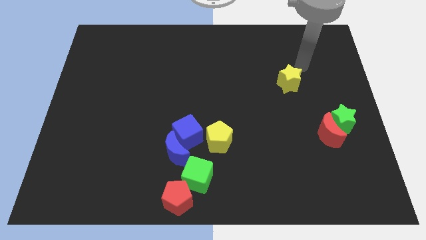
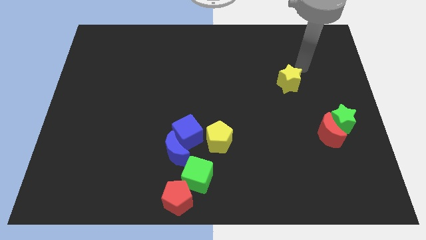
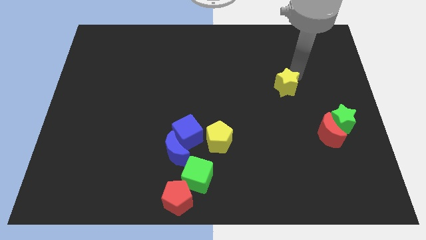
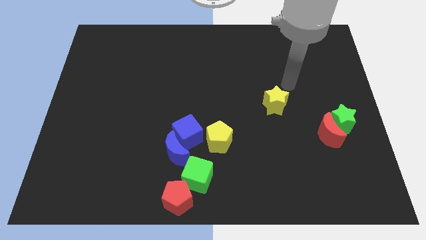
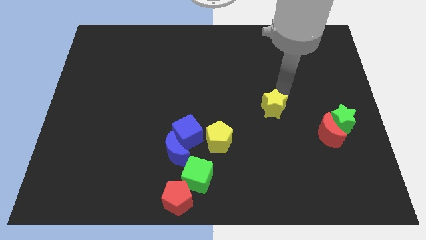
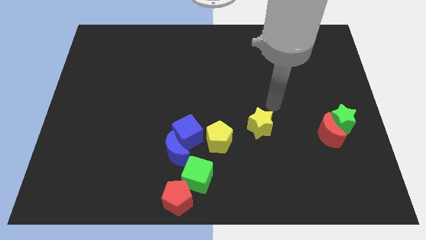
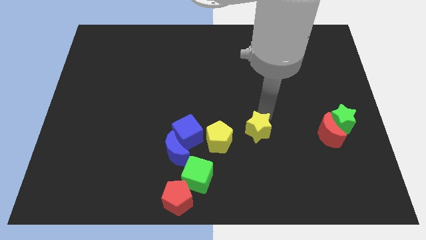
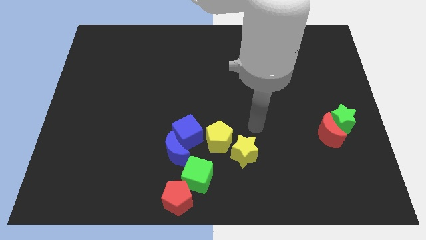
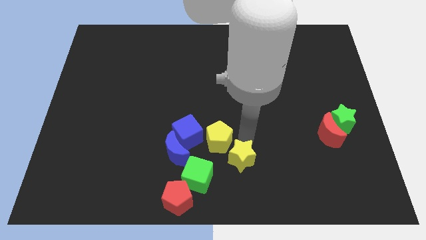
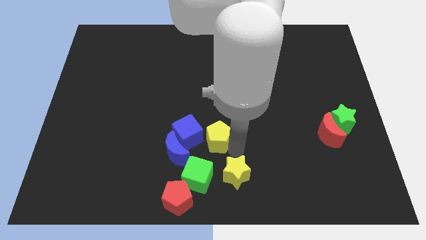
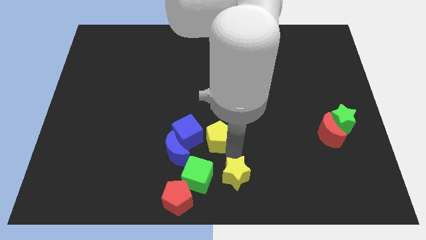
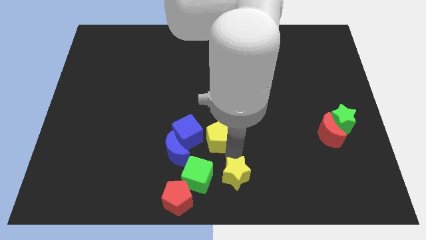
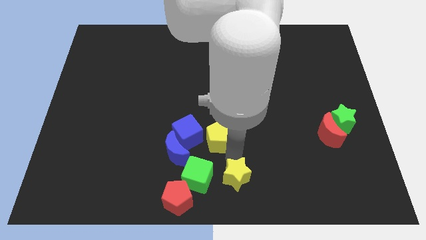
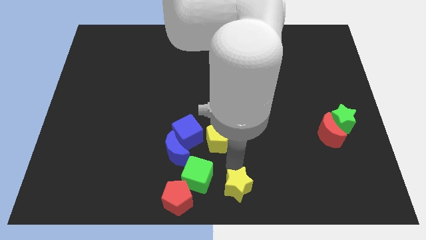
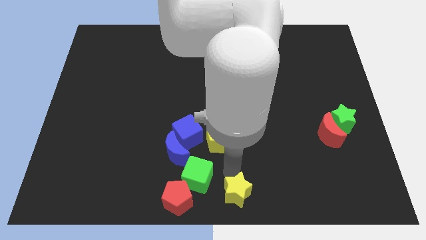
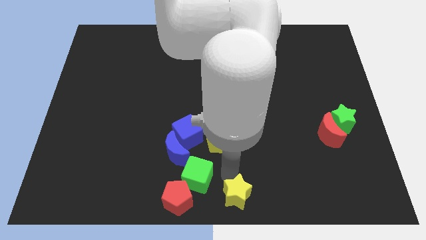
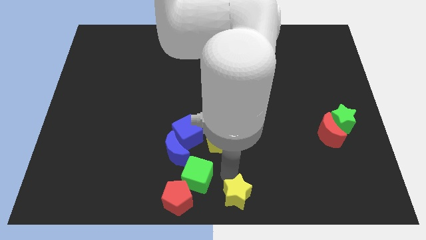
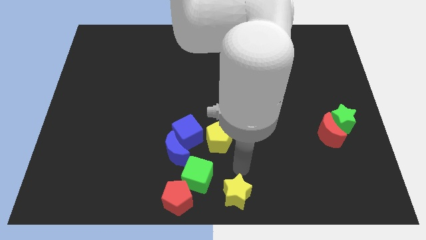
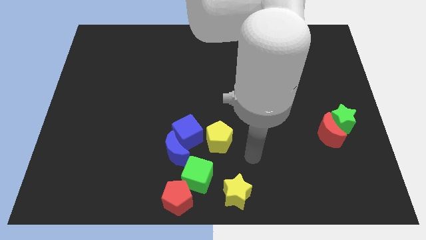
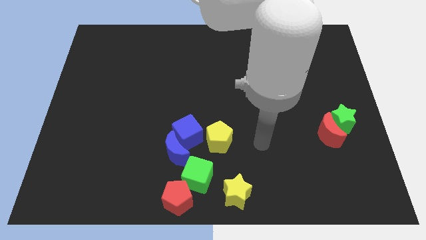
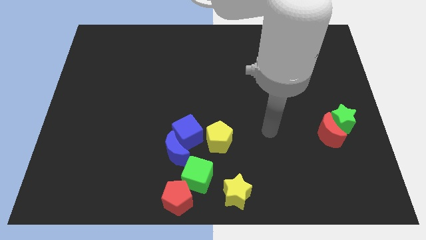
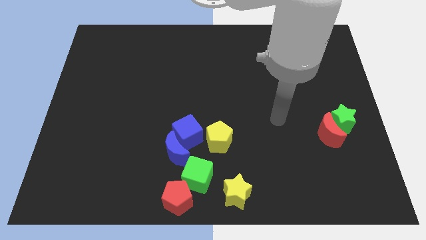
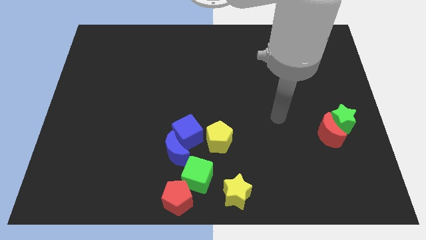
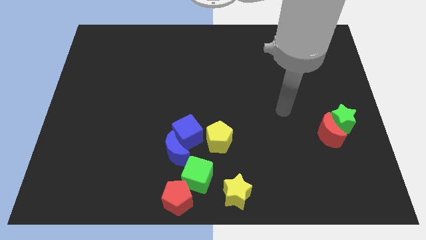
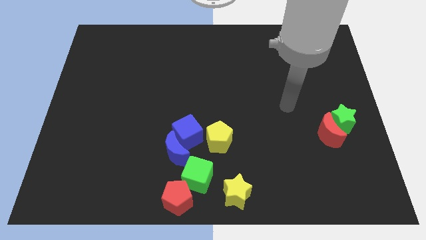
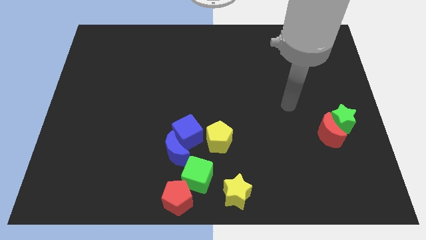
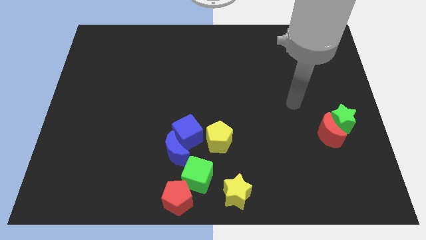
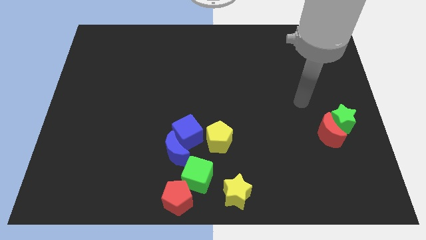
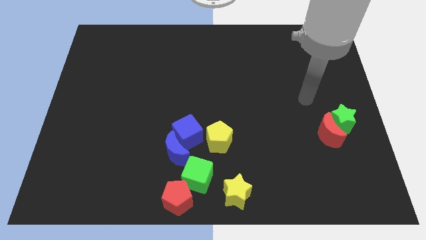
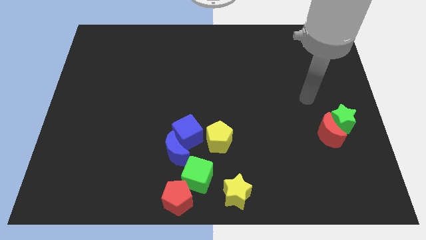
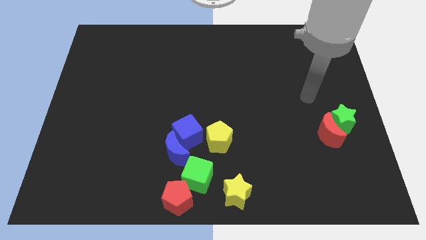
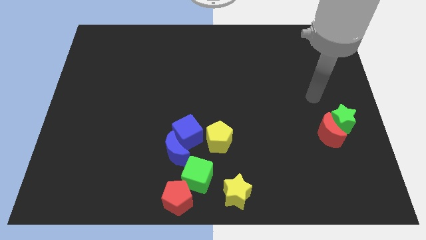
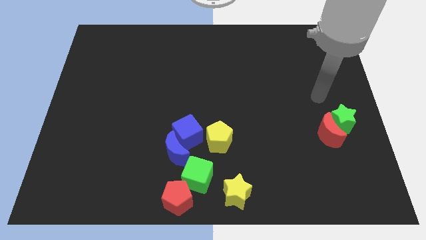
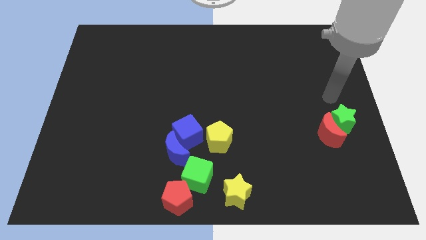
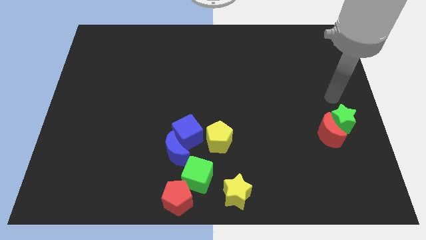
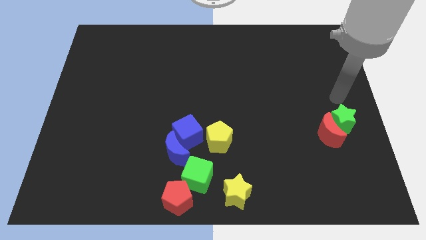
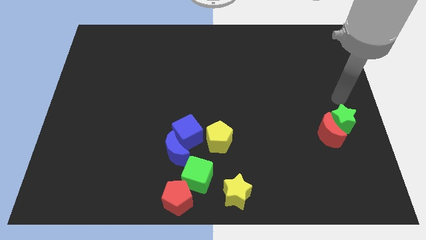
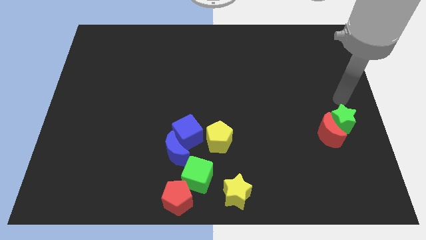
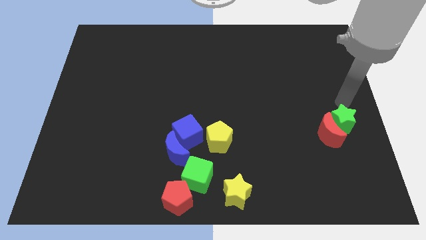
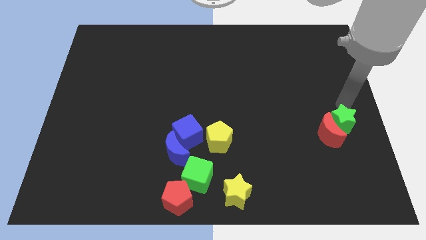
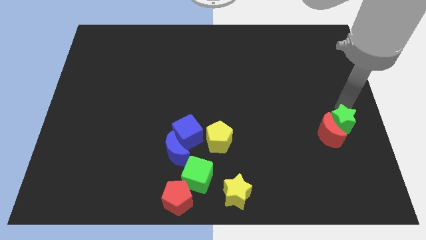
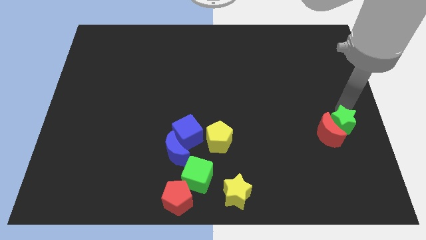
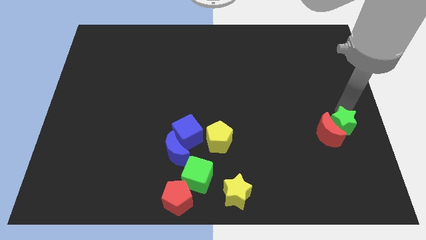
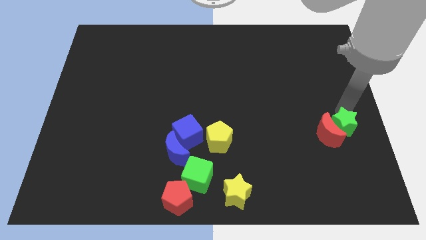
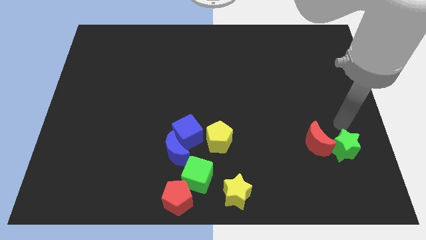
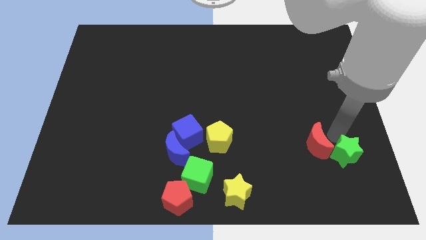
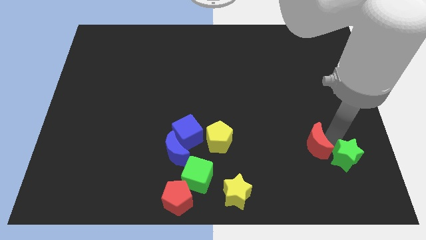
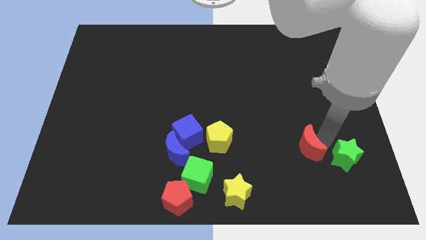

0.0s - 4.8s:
move the red moon to the bottom center

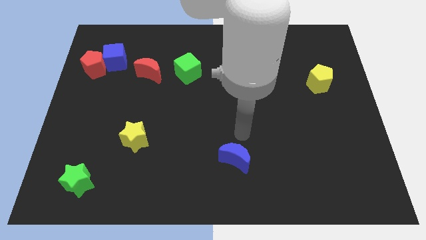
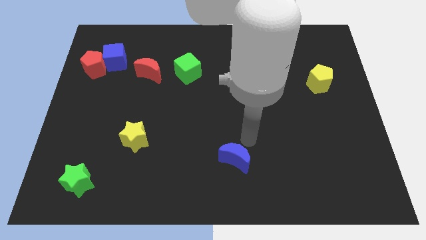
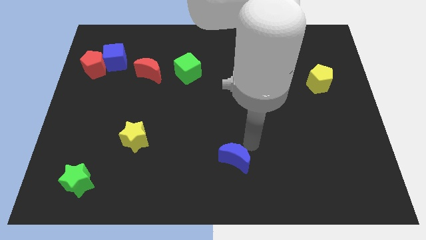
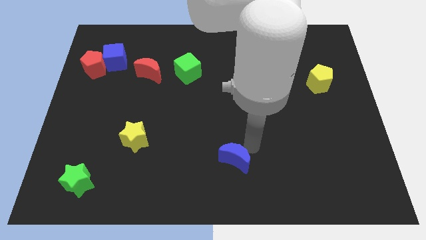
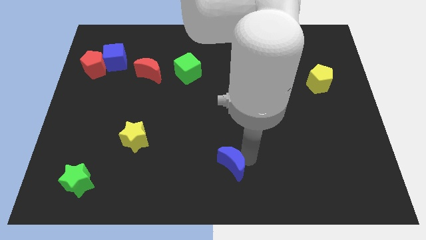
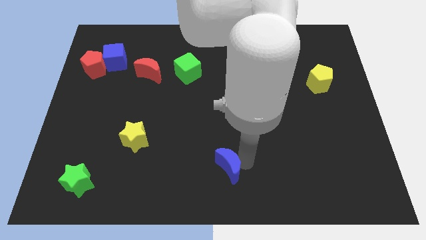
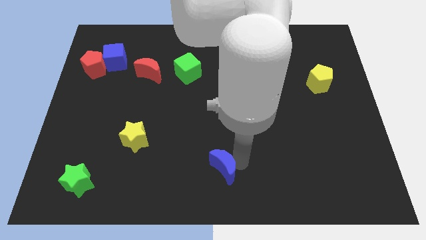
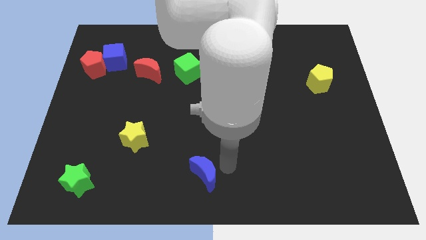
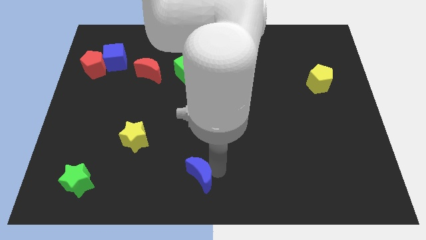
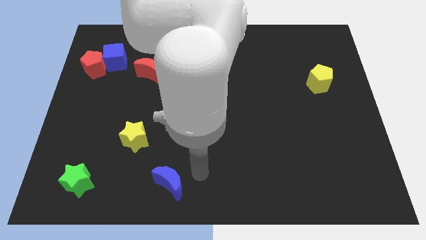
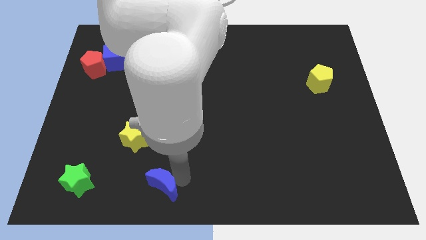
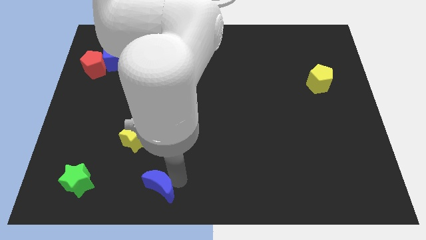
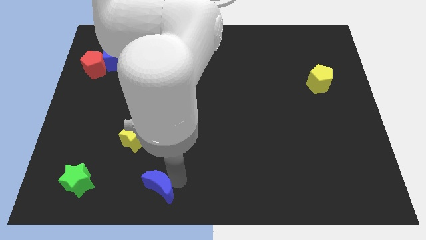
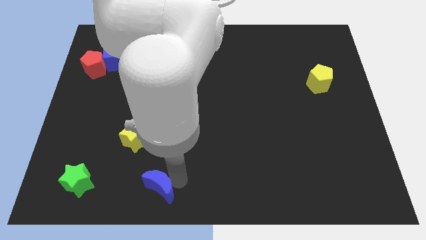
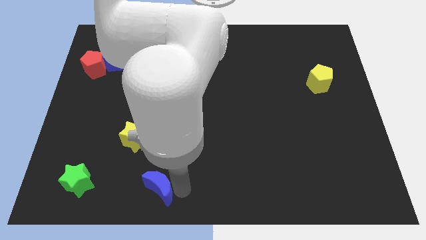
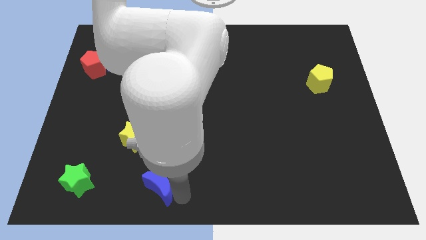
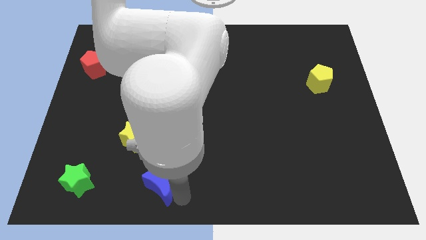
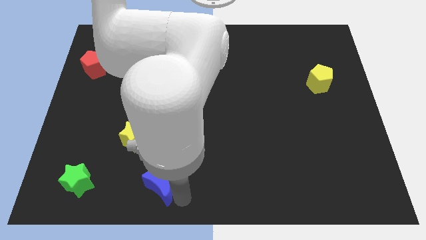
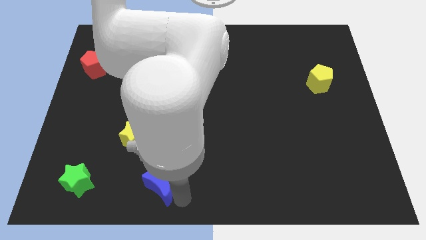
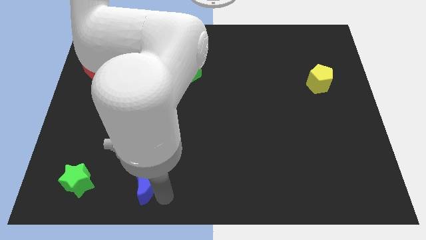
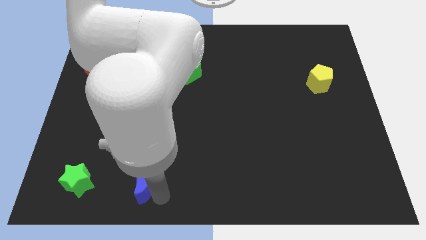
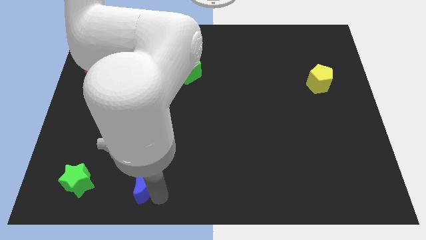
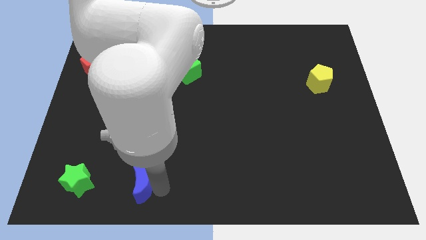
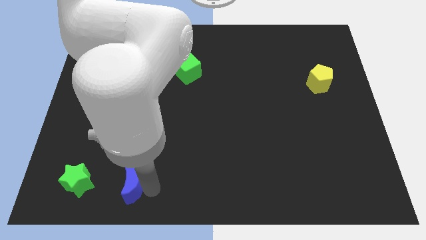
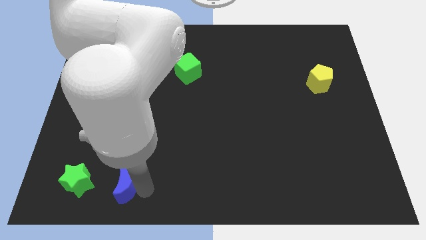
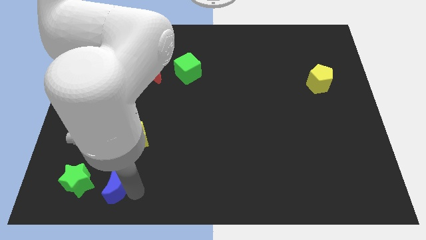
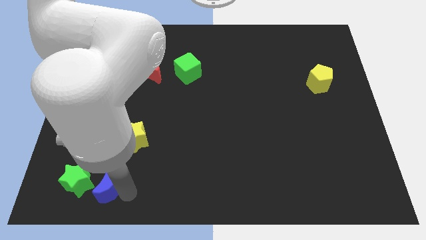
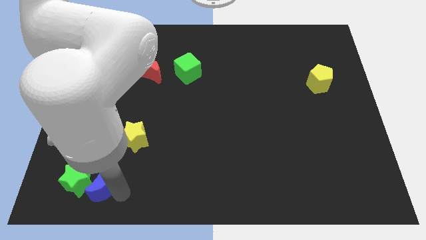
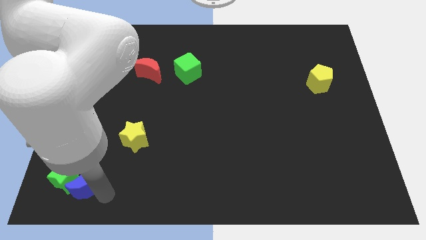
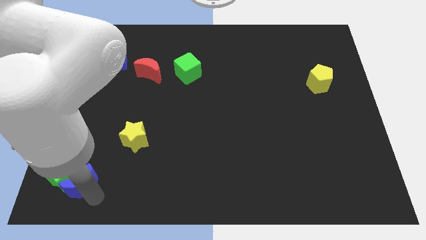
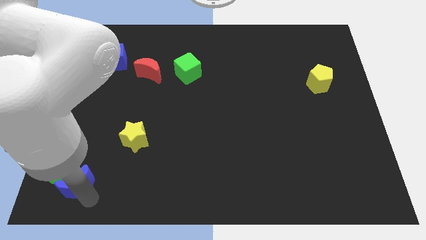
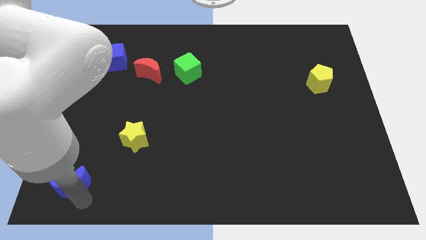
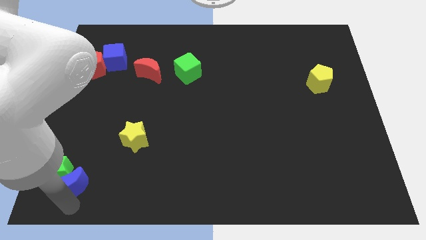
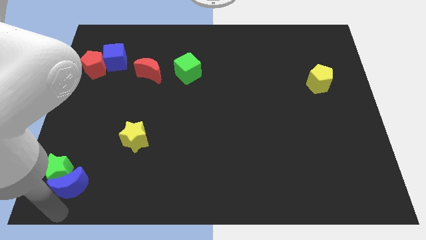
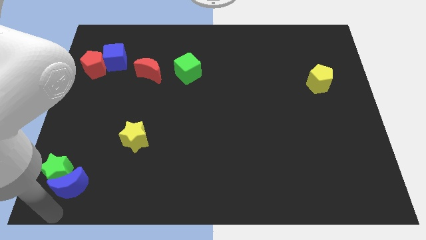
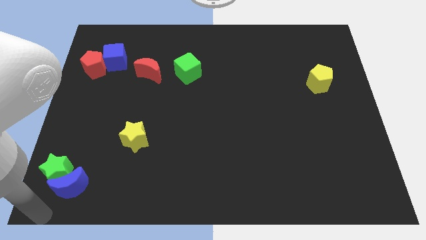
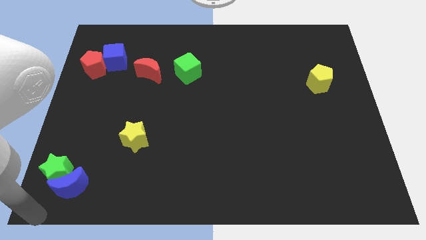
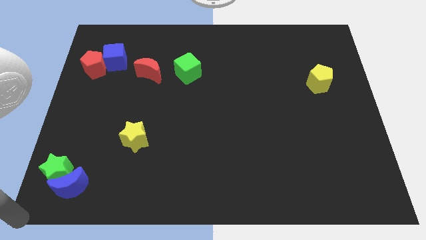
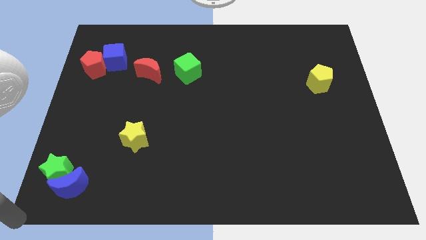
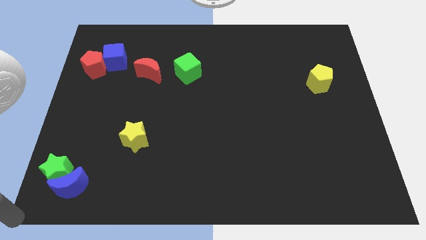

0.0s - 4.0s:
move blue crescent into green star
